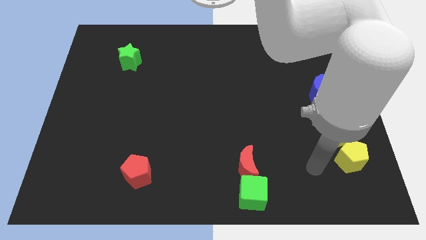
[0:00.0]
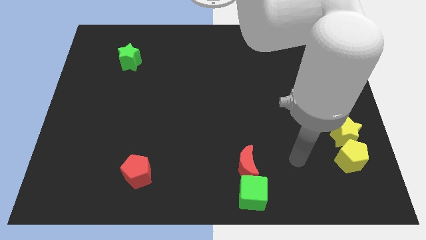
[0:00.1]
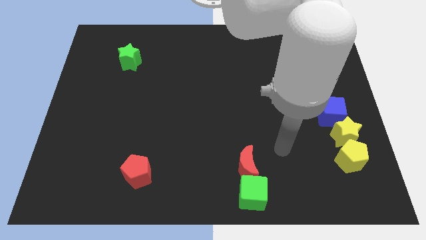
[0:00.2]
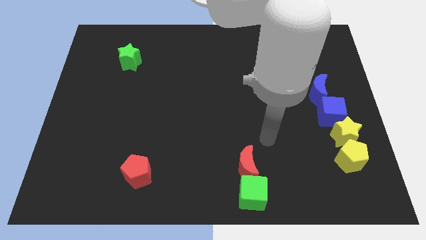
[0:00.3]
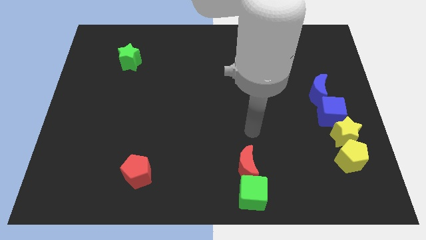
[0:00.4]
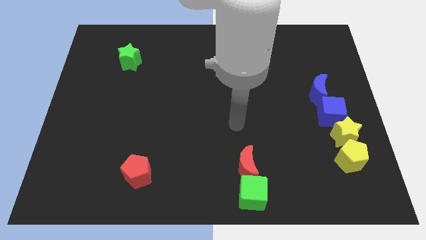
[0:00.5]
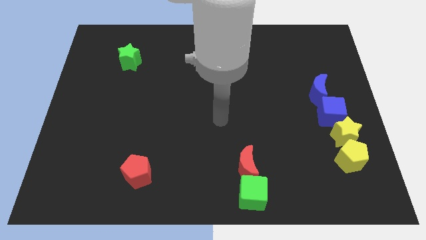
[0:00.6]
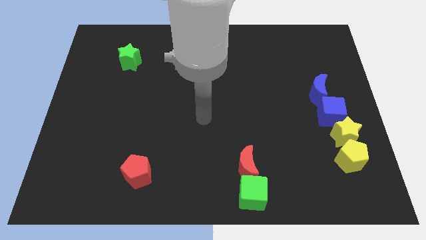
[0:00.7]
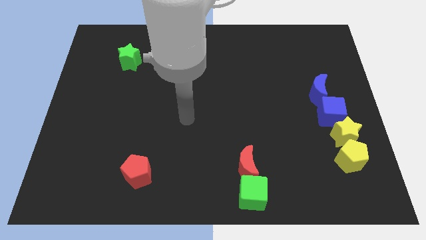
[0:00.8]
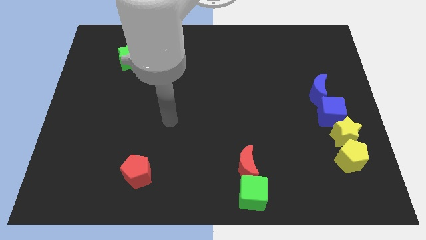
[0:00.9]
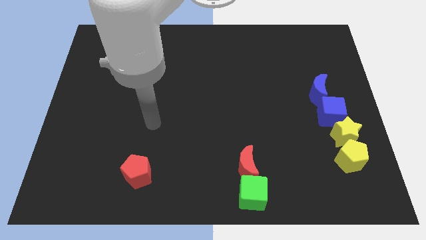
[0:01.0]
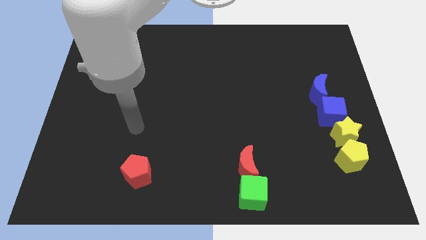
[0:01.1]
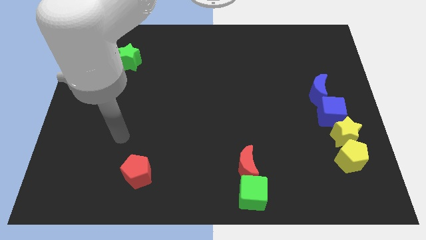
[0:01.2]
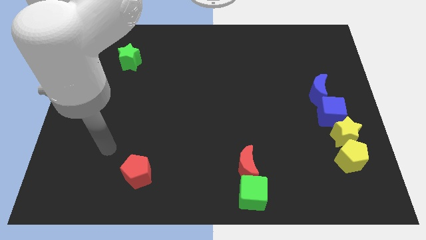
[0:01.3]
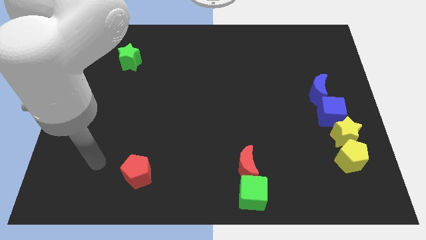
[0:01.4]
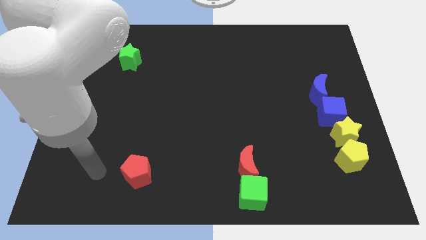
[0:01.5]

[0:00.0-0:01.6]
place your hand at left side of the red crescent

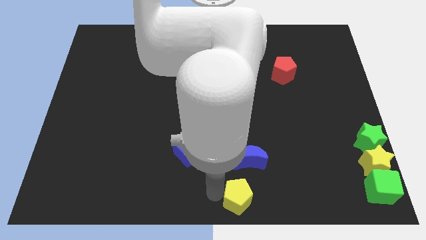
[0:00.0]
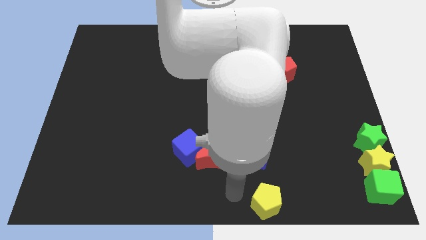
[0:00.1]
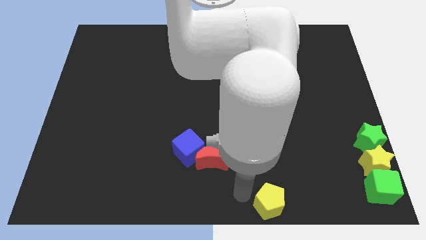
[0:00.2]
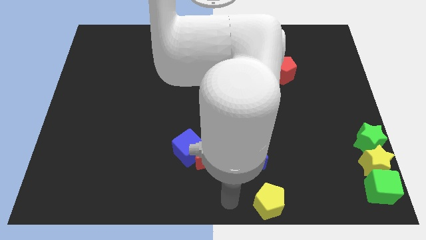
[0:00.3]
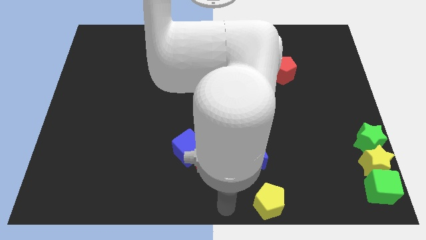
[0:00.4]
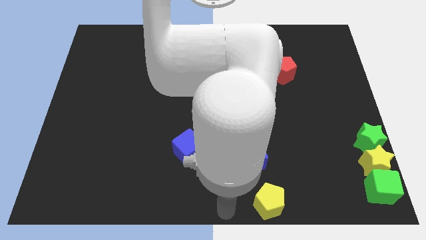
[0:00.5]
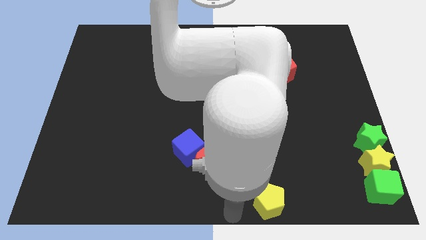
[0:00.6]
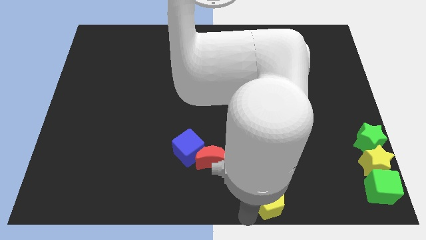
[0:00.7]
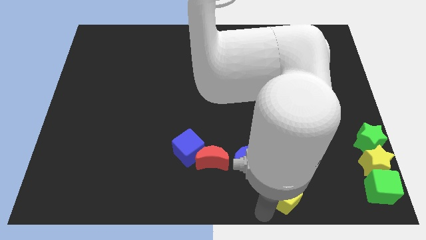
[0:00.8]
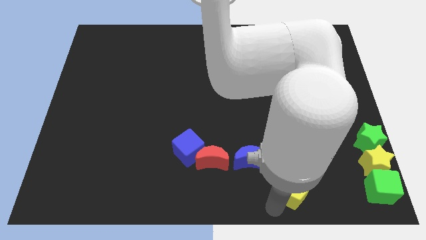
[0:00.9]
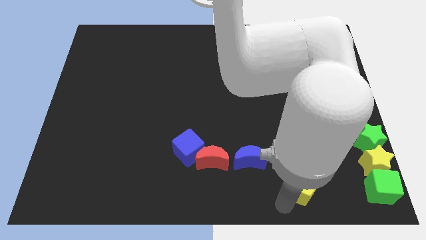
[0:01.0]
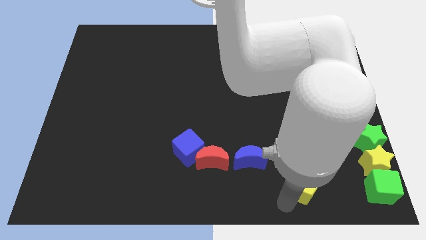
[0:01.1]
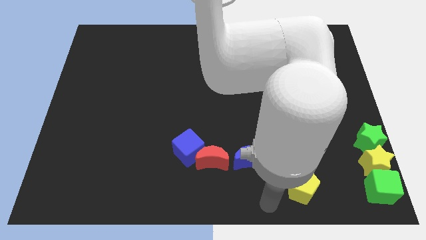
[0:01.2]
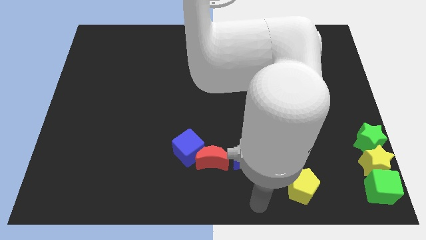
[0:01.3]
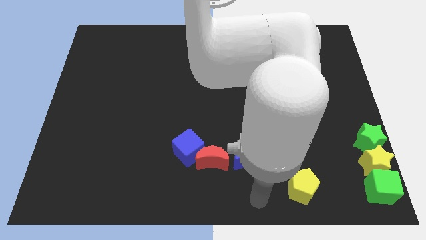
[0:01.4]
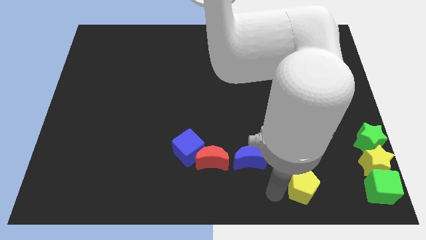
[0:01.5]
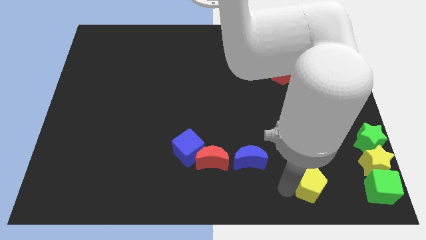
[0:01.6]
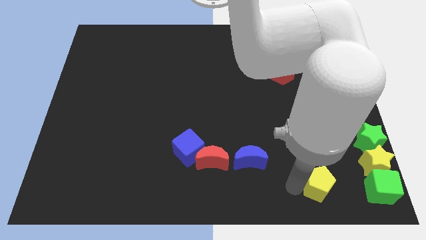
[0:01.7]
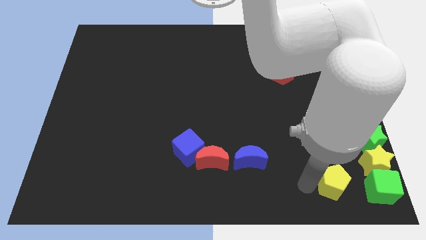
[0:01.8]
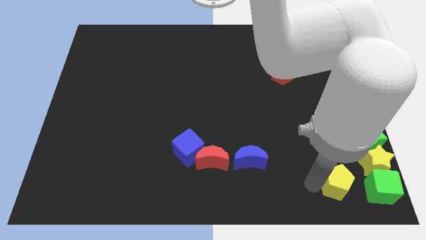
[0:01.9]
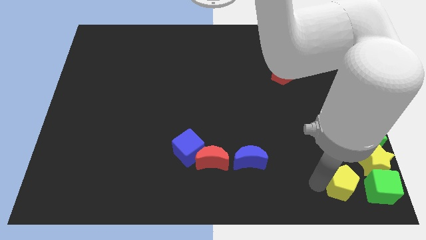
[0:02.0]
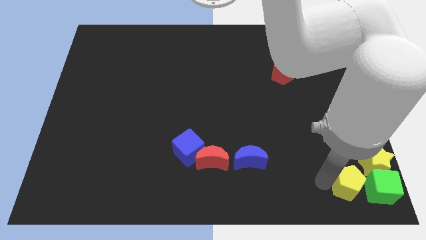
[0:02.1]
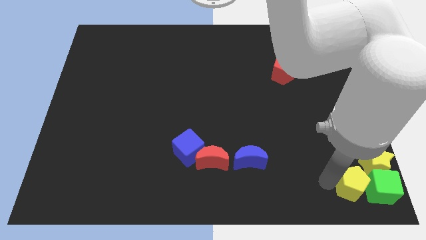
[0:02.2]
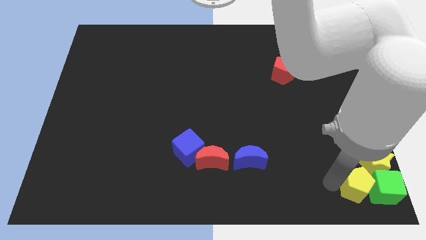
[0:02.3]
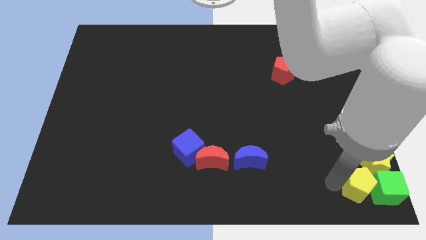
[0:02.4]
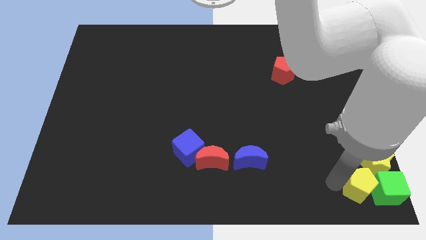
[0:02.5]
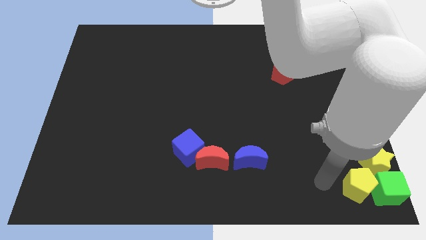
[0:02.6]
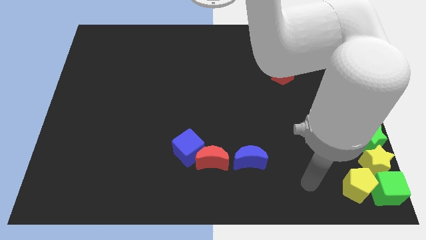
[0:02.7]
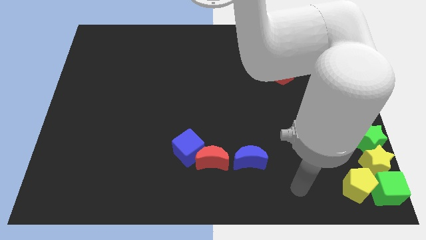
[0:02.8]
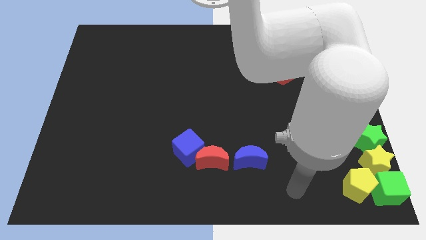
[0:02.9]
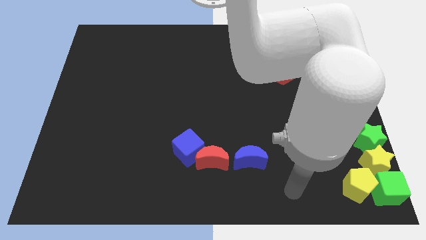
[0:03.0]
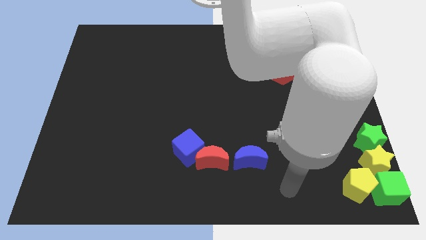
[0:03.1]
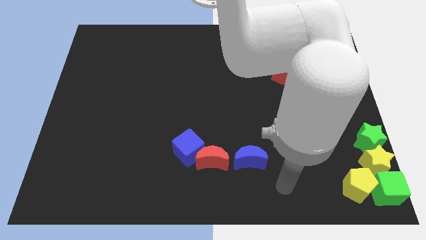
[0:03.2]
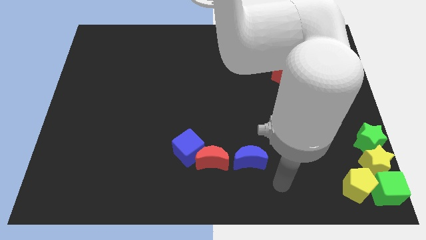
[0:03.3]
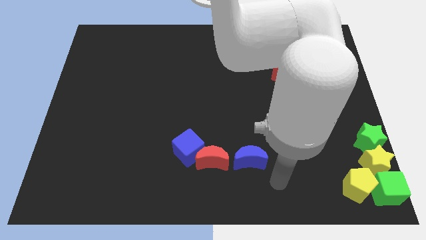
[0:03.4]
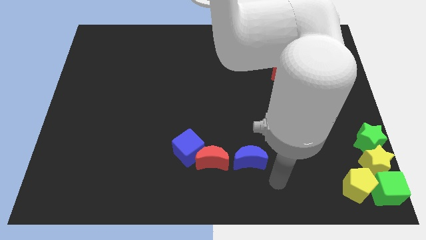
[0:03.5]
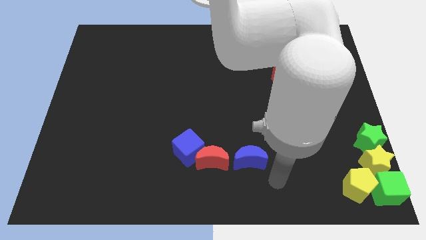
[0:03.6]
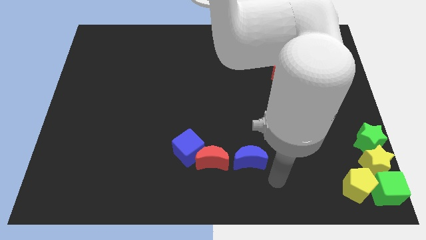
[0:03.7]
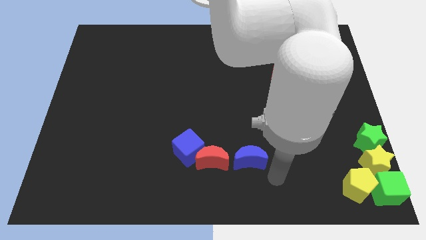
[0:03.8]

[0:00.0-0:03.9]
push the yellow pentagon into the green cube

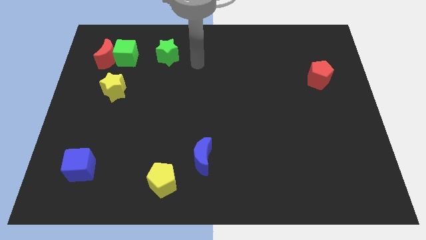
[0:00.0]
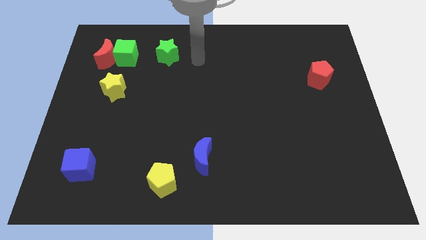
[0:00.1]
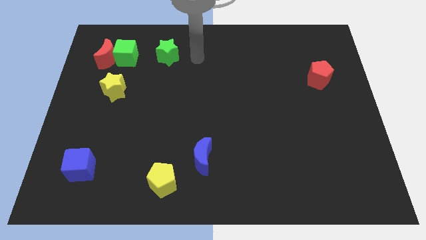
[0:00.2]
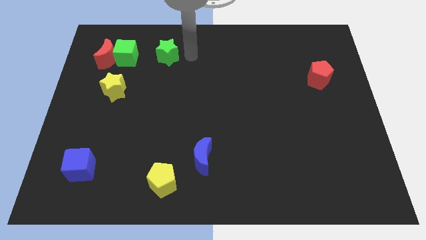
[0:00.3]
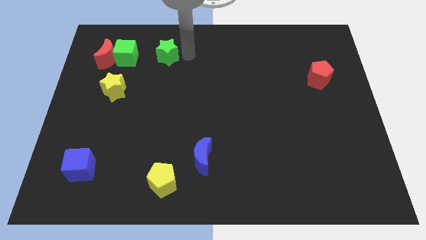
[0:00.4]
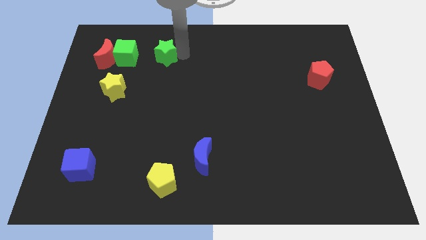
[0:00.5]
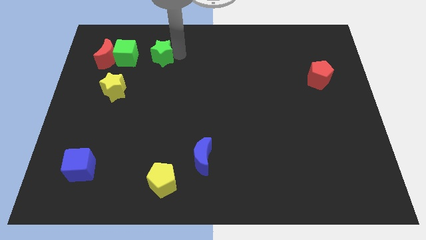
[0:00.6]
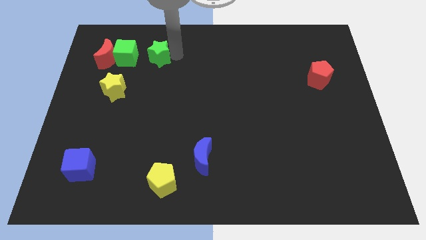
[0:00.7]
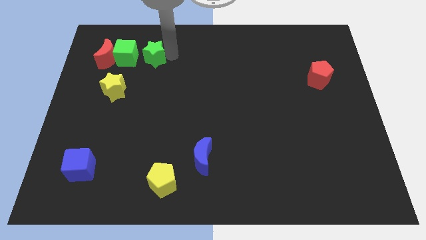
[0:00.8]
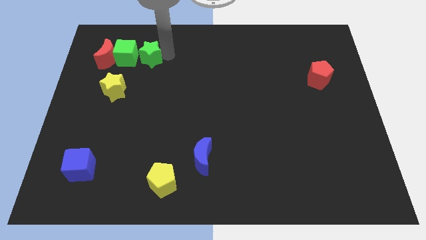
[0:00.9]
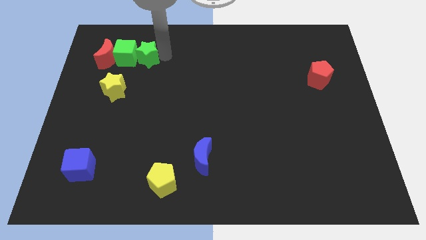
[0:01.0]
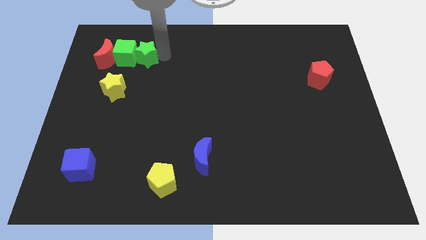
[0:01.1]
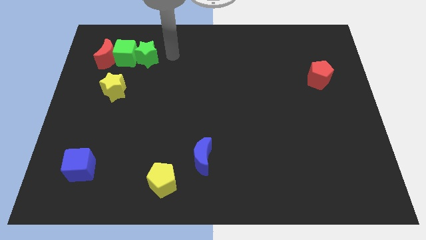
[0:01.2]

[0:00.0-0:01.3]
move the green star to the right side of the green cube

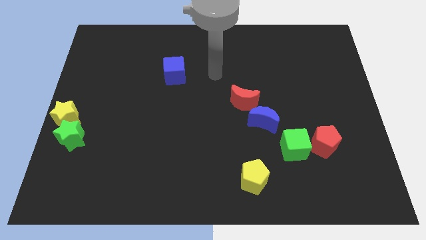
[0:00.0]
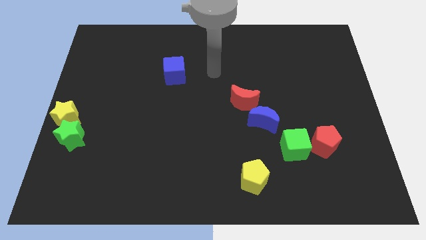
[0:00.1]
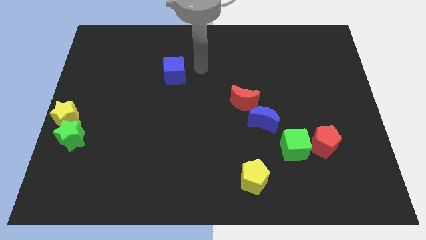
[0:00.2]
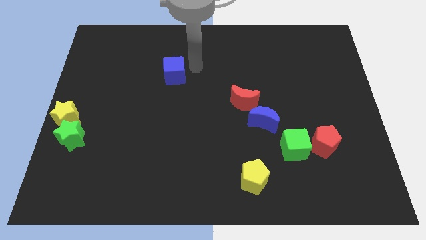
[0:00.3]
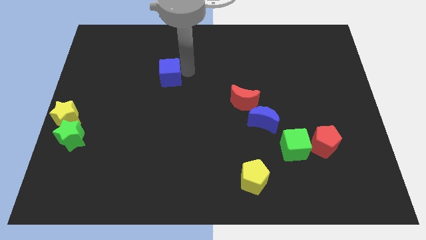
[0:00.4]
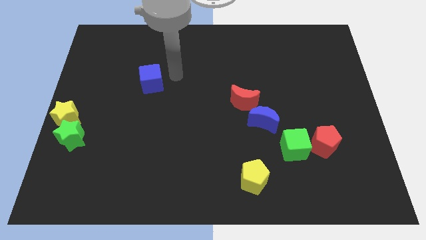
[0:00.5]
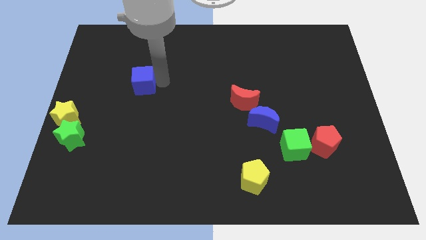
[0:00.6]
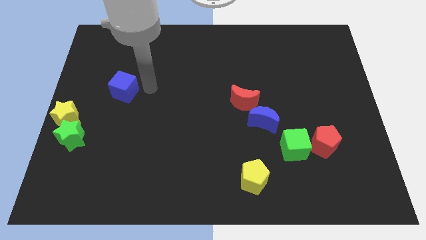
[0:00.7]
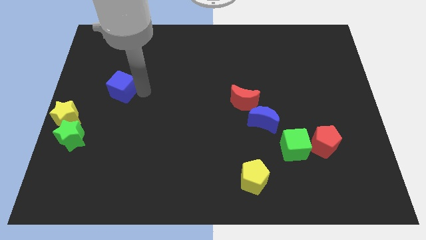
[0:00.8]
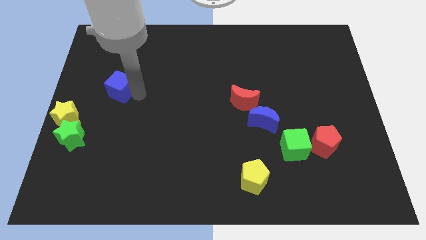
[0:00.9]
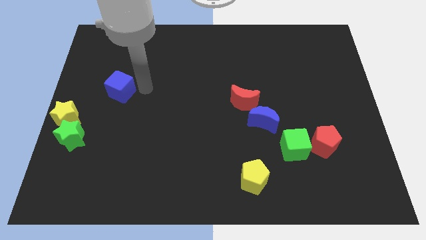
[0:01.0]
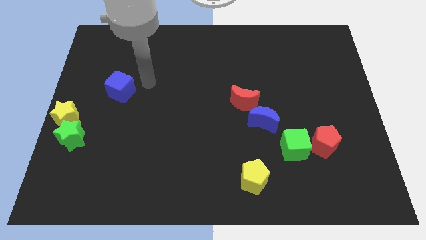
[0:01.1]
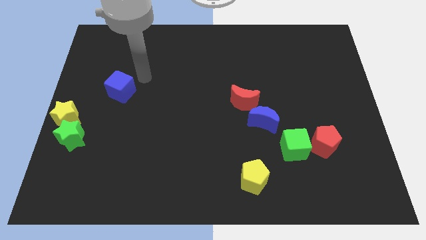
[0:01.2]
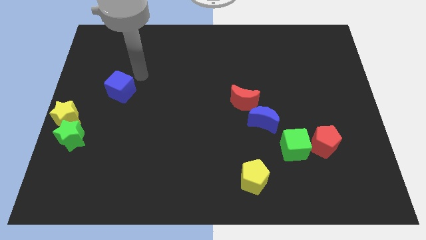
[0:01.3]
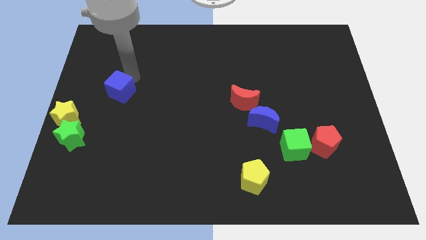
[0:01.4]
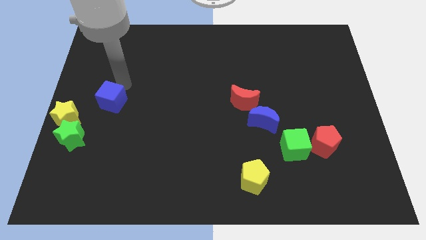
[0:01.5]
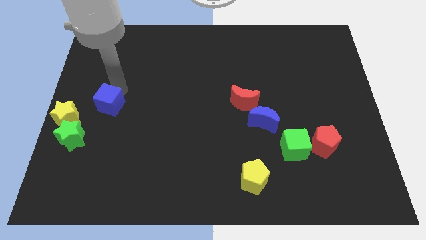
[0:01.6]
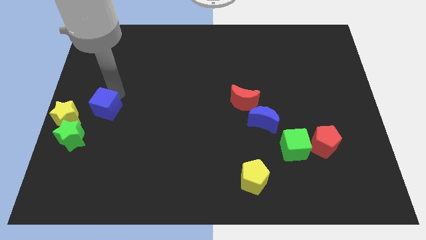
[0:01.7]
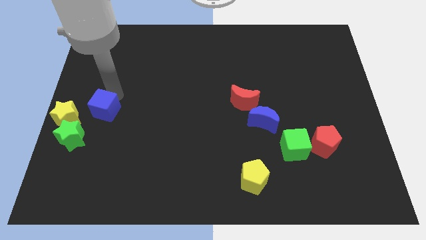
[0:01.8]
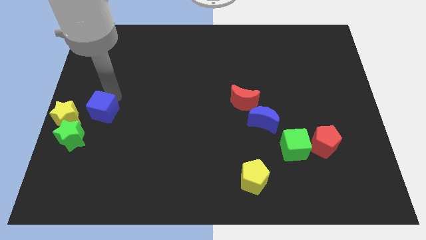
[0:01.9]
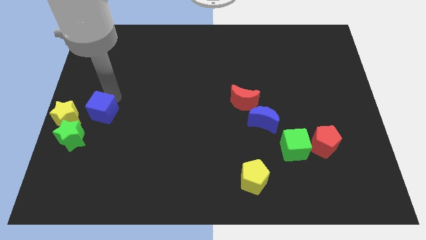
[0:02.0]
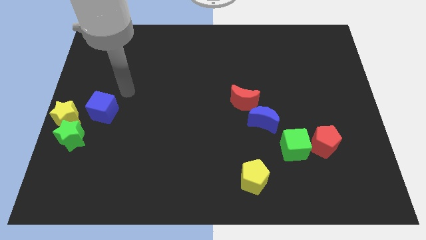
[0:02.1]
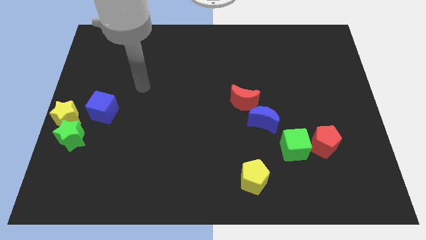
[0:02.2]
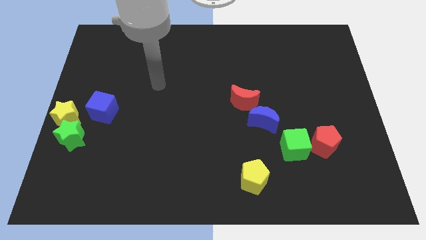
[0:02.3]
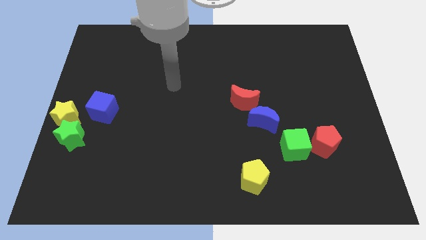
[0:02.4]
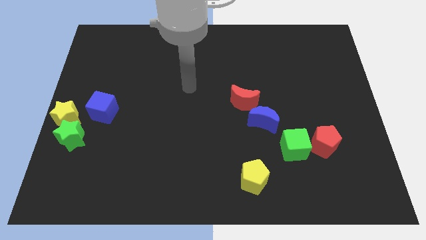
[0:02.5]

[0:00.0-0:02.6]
push blue cube towards yellow star
